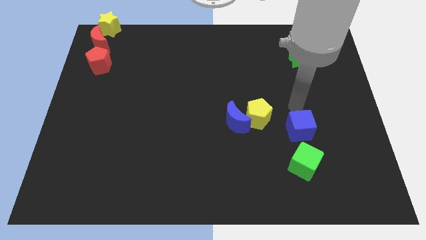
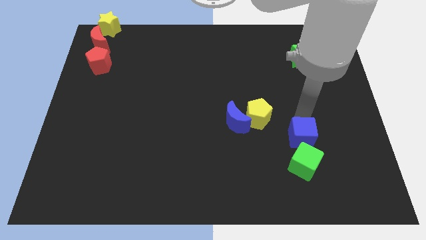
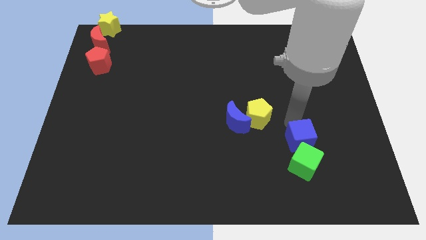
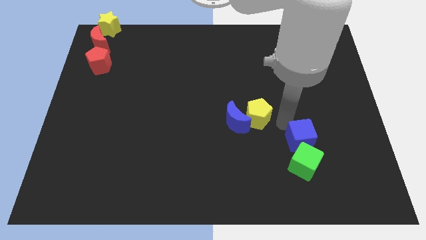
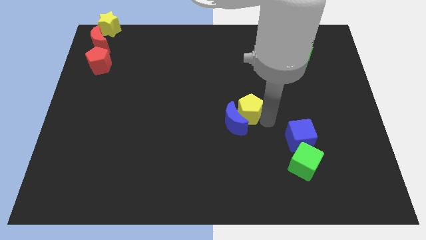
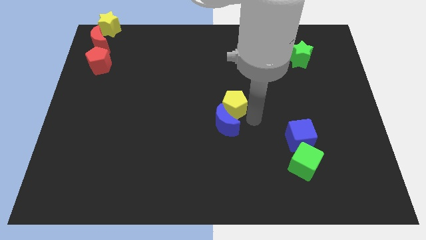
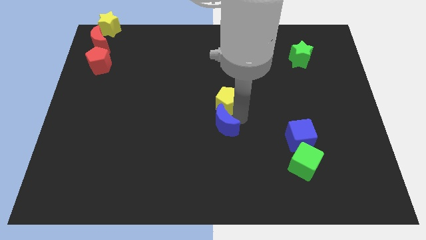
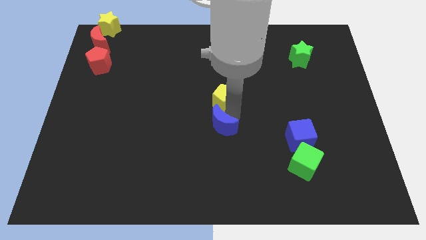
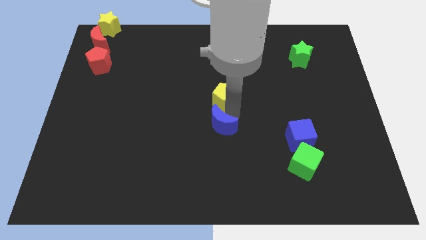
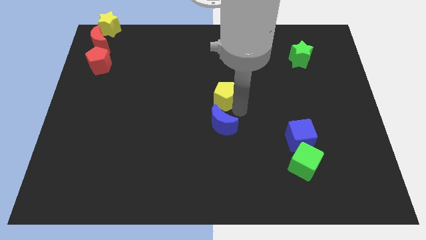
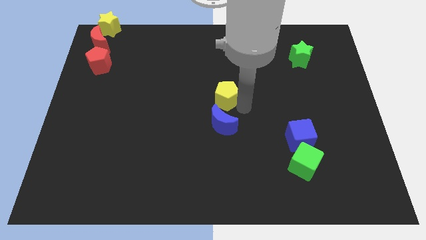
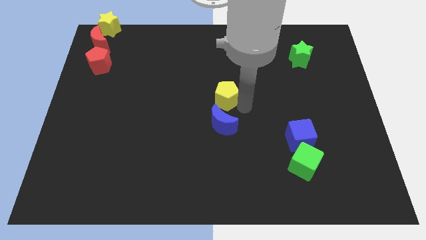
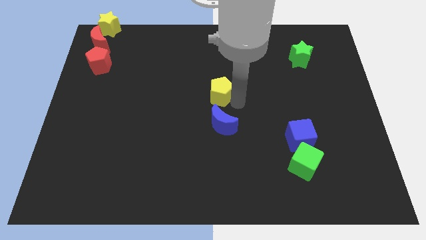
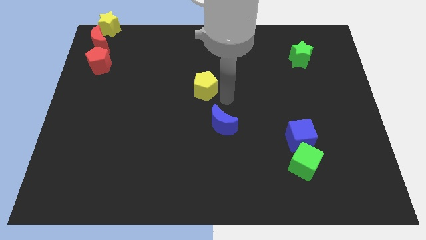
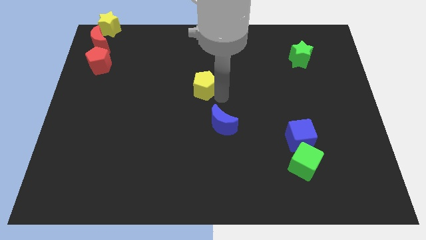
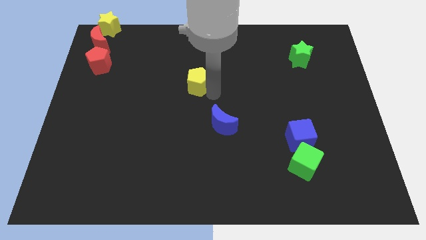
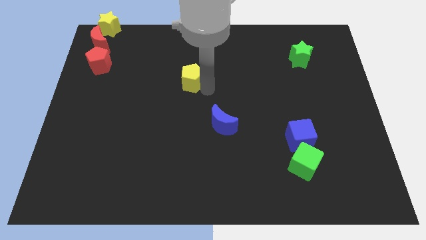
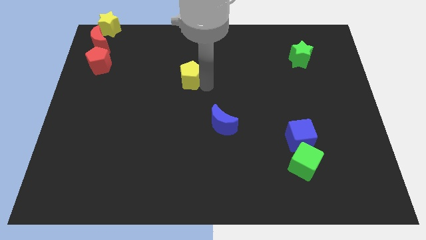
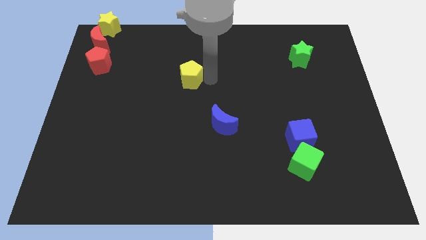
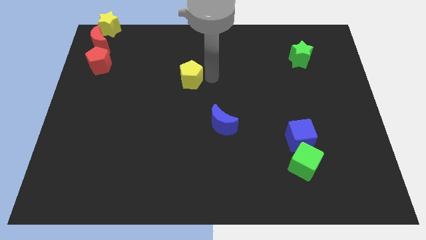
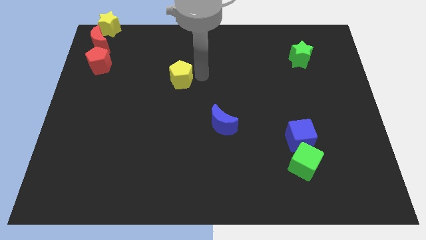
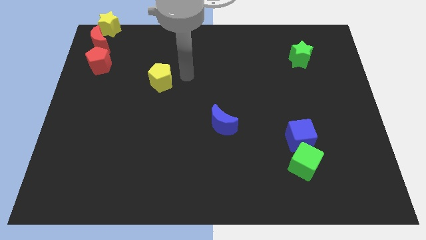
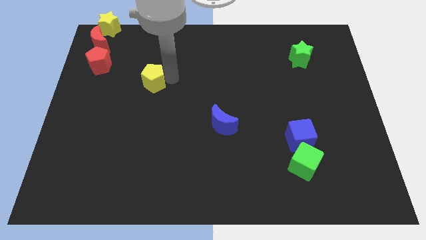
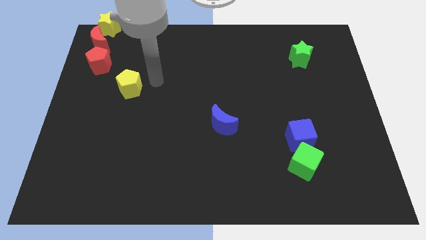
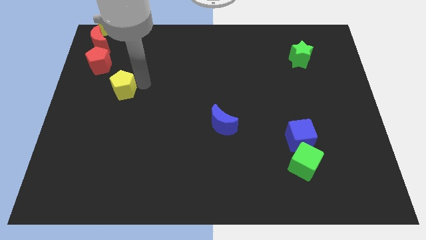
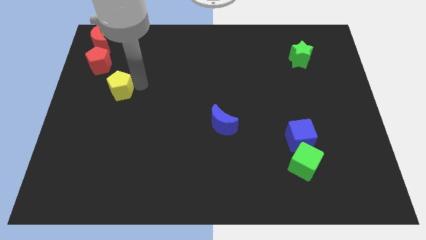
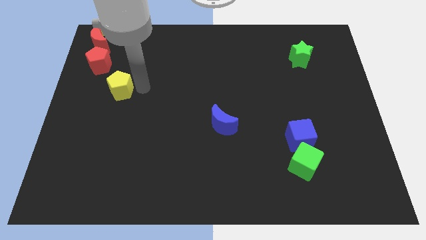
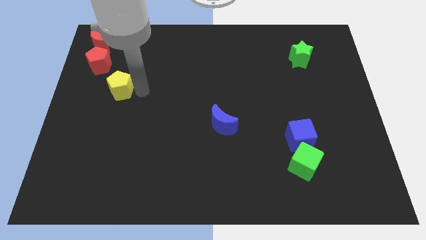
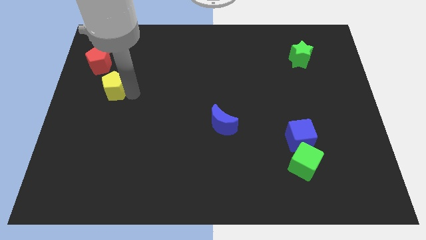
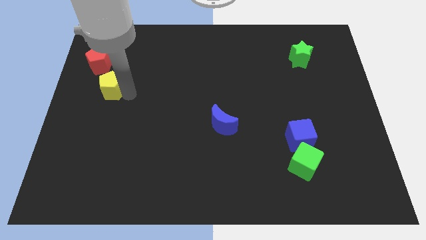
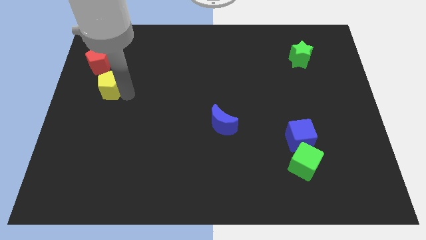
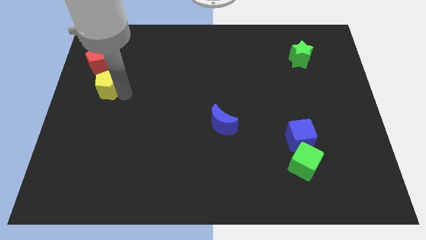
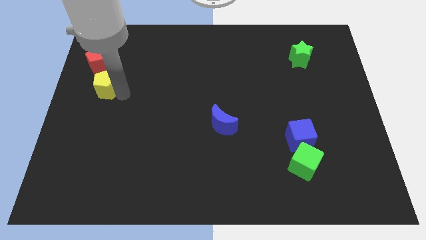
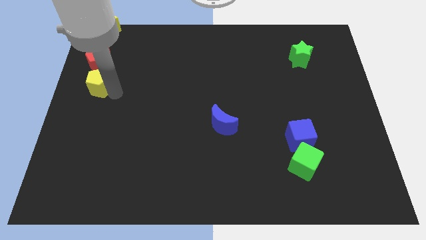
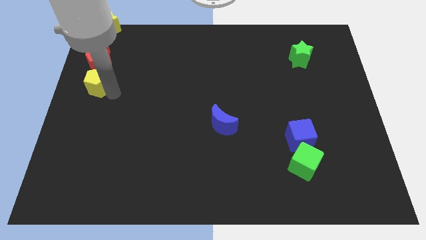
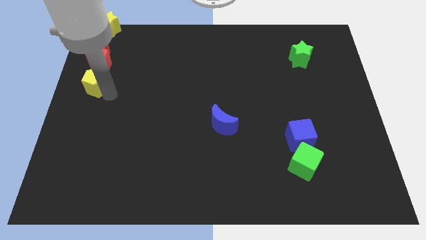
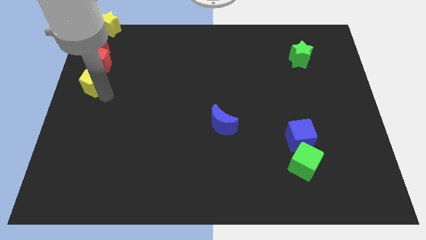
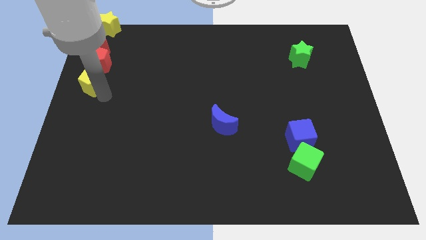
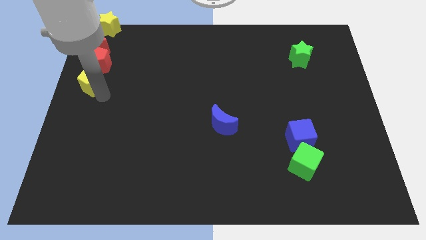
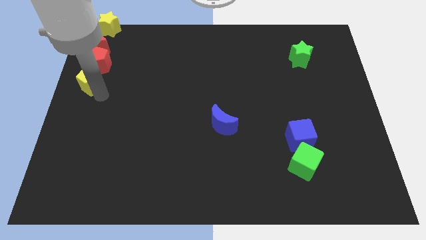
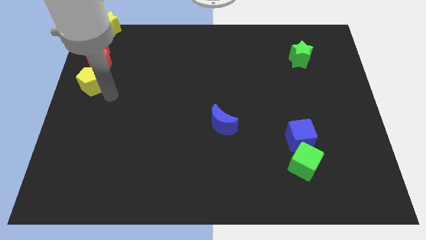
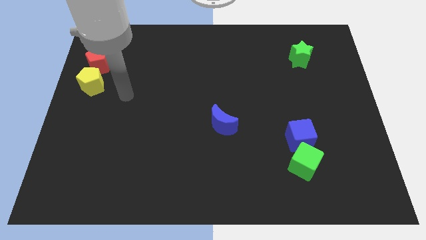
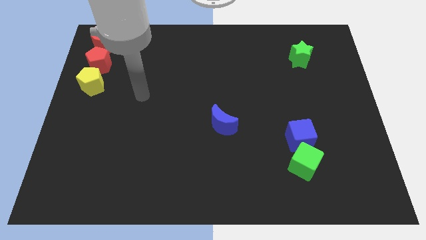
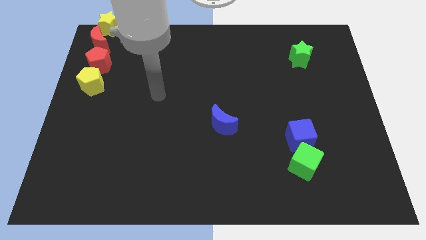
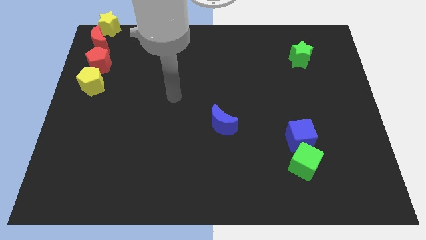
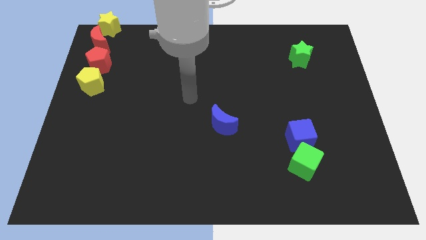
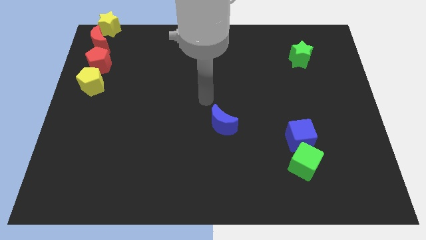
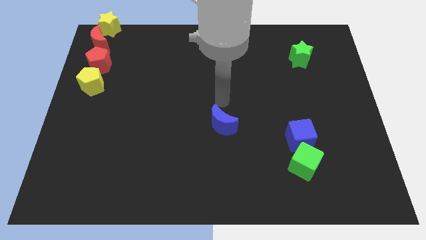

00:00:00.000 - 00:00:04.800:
place the yellow pentagon below the red pentagon

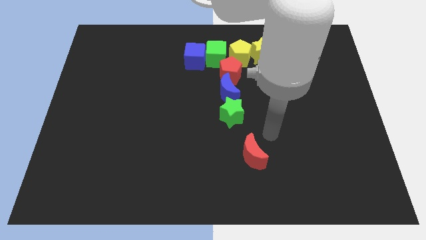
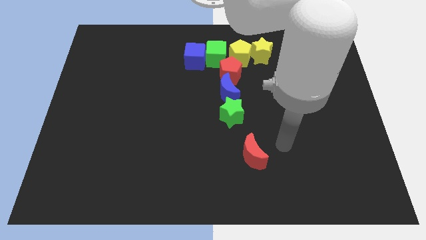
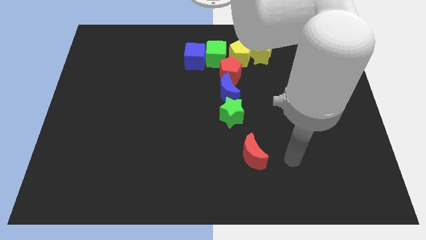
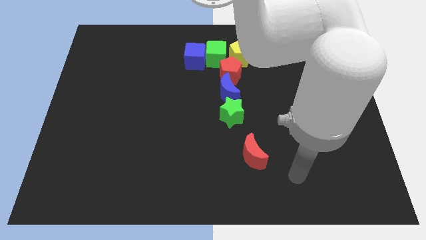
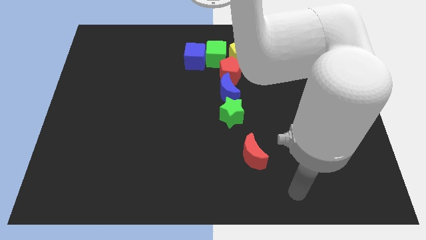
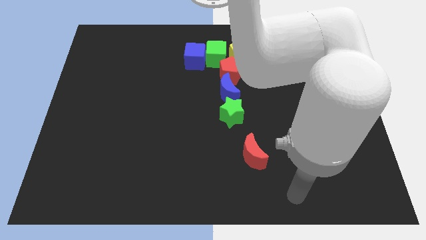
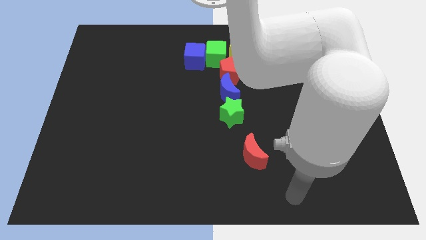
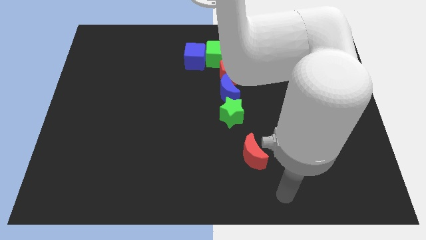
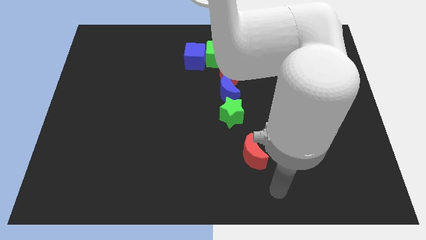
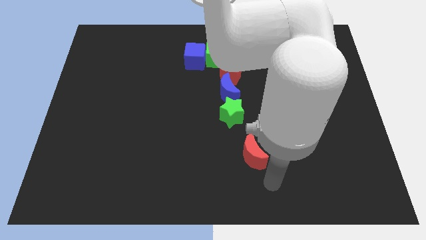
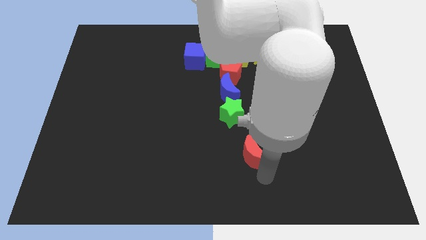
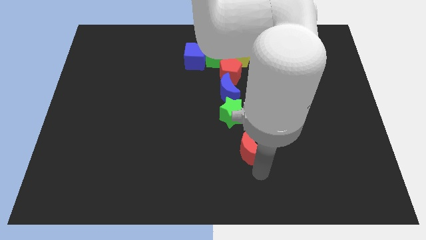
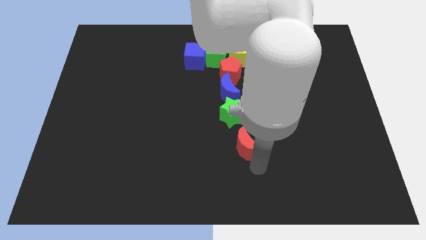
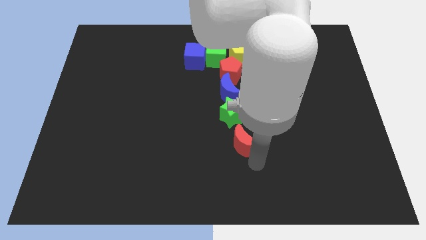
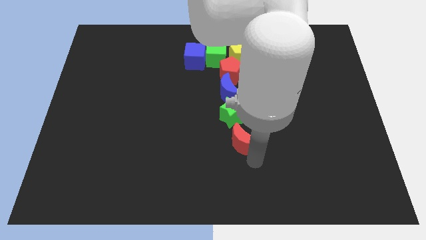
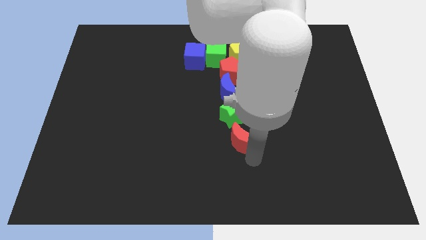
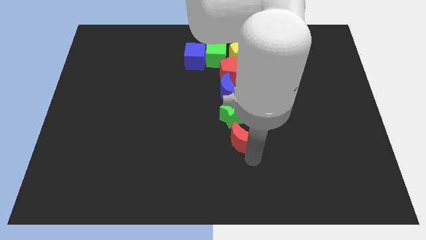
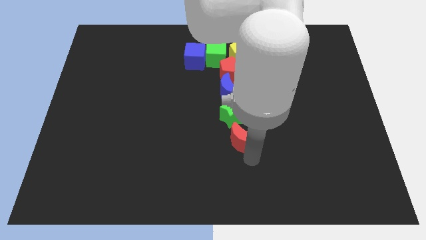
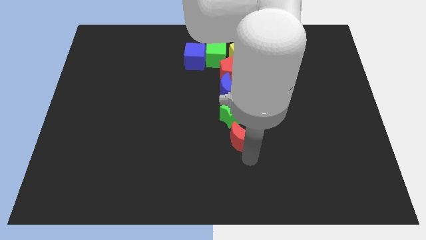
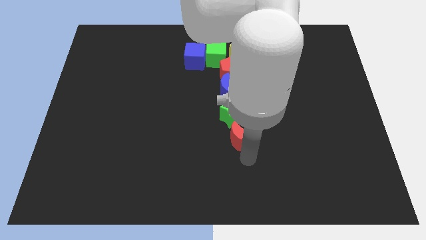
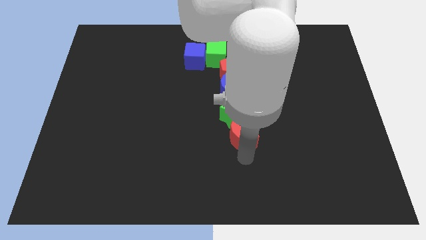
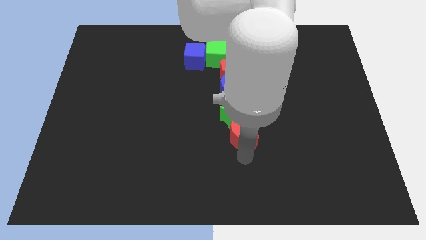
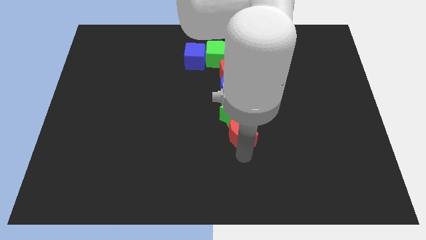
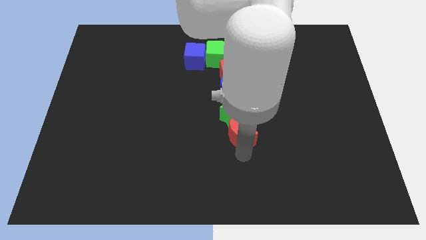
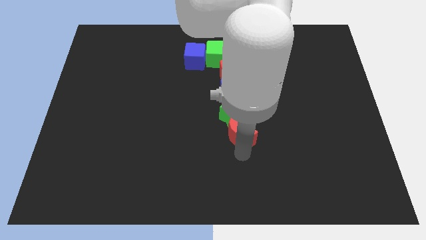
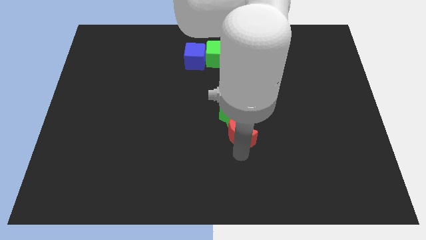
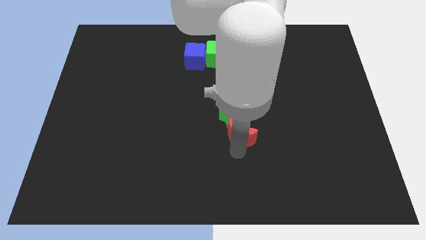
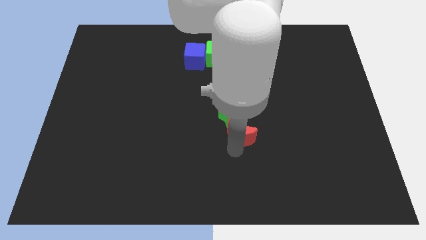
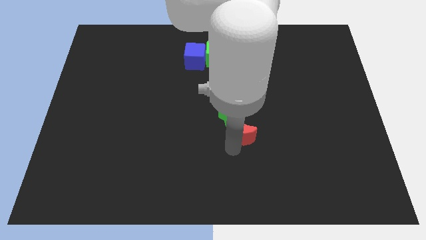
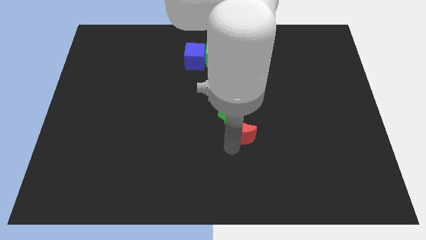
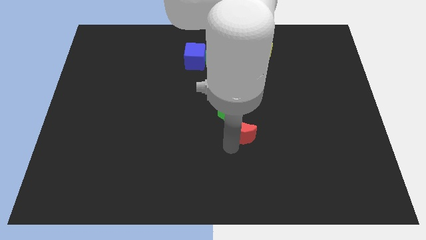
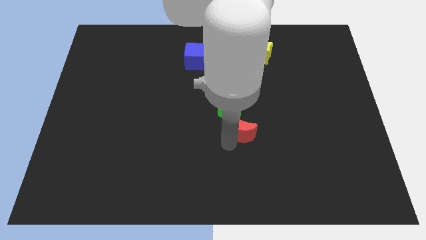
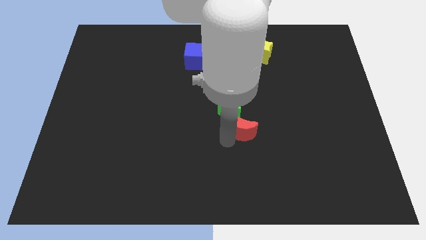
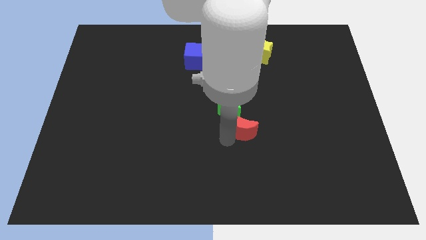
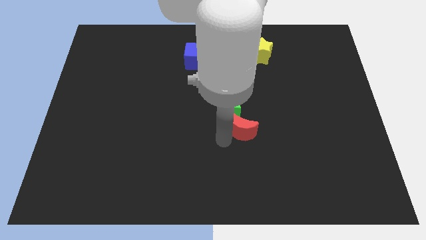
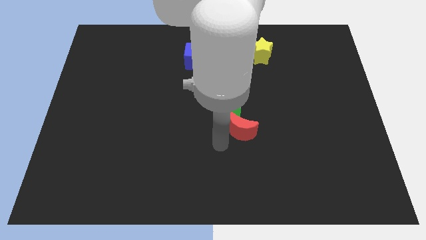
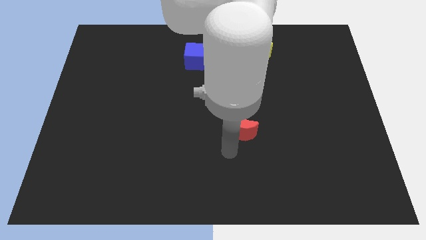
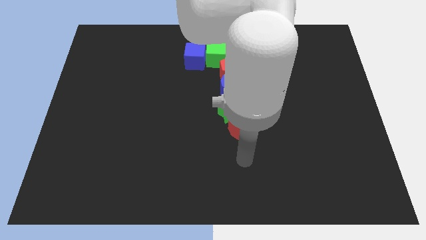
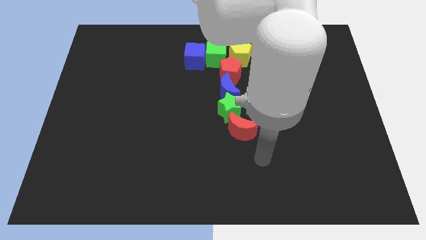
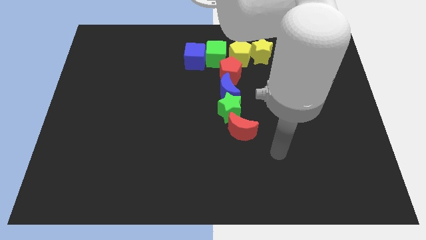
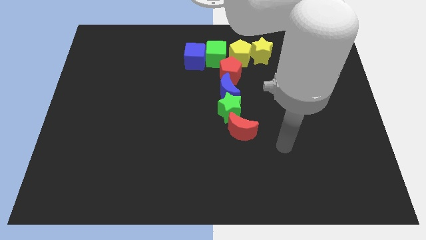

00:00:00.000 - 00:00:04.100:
move the red moon below the green star
